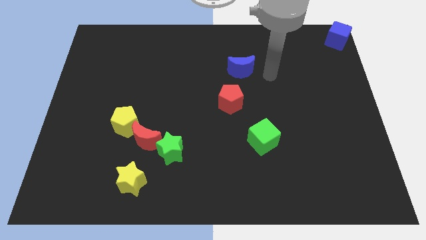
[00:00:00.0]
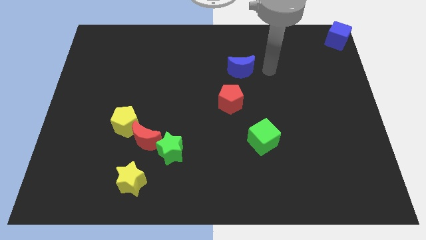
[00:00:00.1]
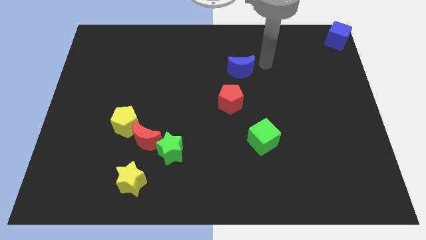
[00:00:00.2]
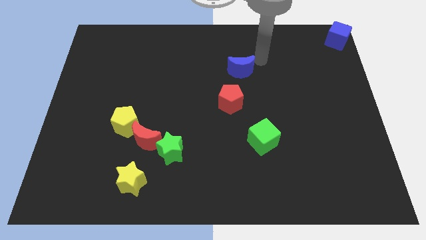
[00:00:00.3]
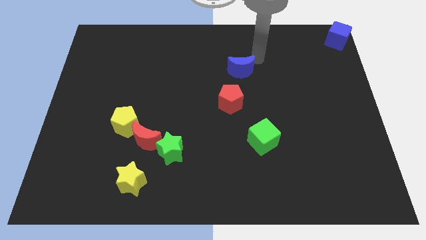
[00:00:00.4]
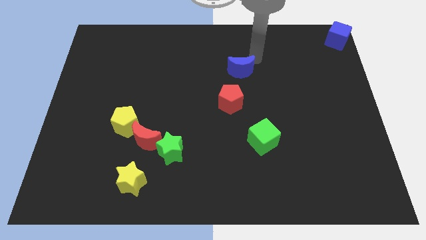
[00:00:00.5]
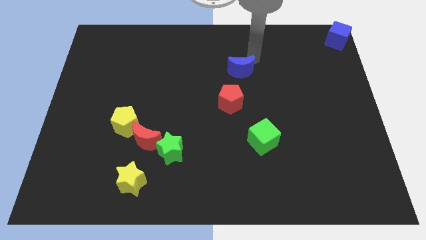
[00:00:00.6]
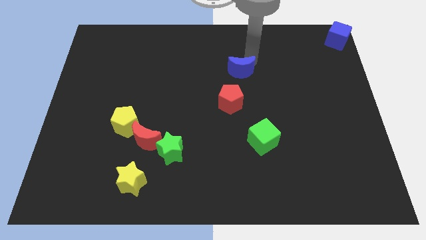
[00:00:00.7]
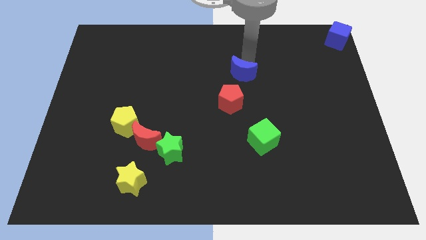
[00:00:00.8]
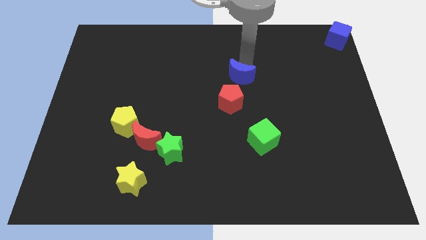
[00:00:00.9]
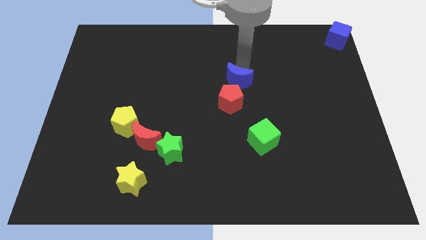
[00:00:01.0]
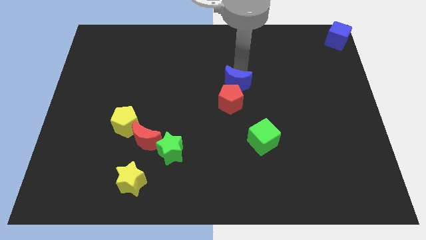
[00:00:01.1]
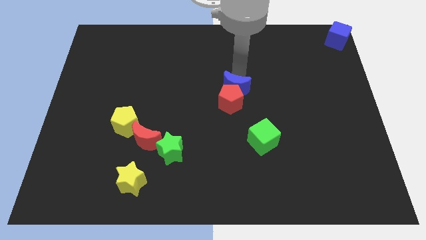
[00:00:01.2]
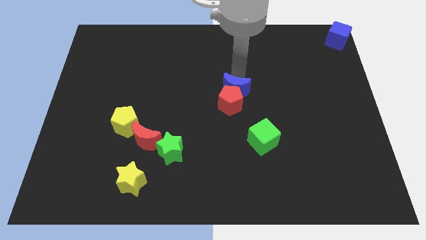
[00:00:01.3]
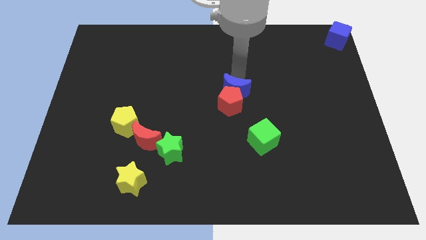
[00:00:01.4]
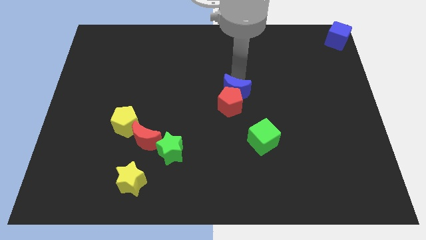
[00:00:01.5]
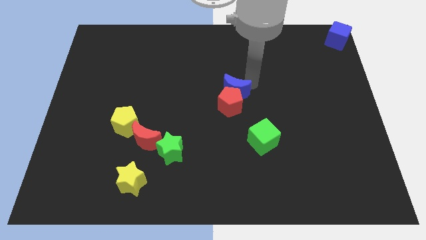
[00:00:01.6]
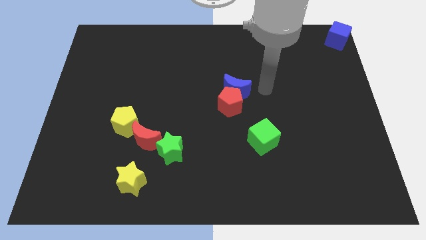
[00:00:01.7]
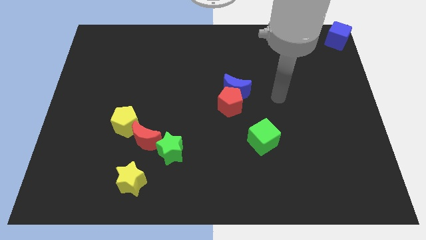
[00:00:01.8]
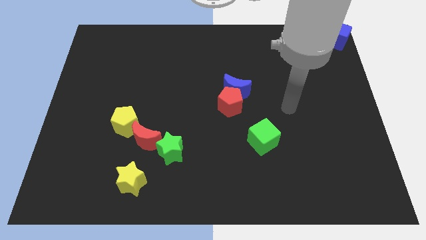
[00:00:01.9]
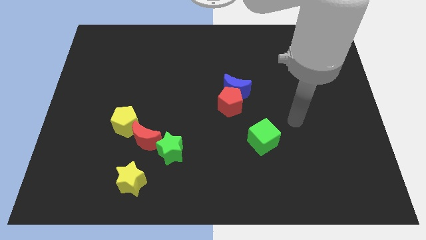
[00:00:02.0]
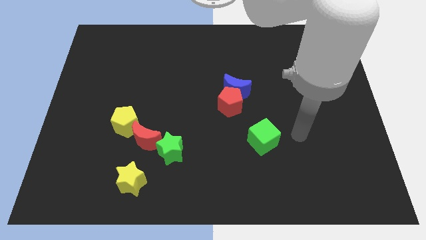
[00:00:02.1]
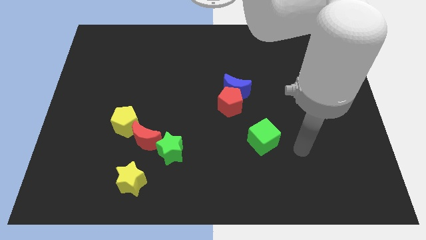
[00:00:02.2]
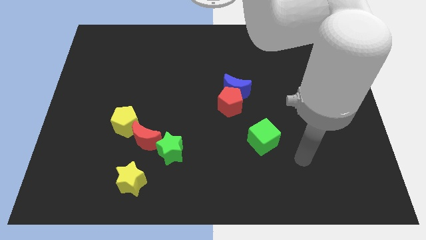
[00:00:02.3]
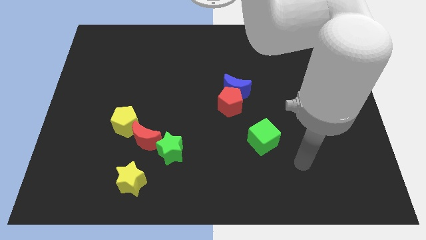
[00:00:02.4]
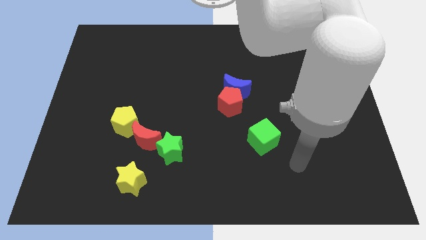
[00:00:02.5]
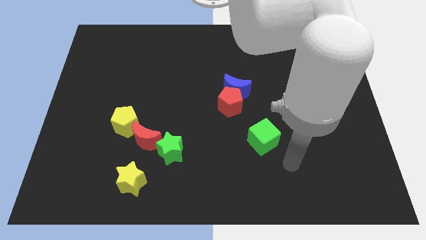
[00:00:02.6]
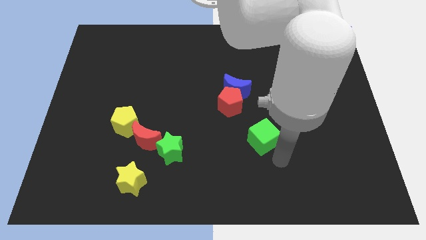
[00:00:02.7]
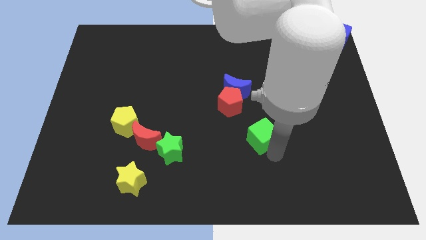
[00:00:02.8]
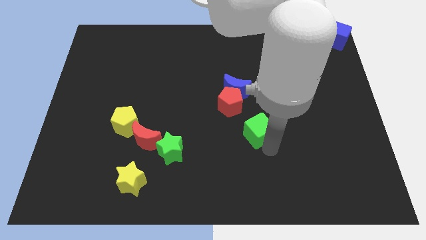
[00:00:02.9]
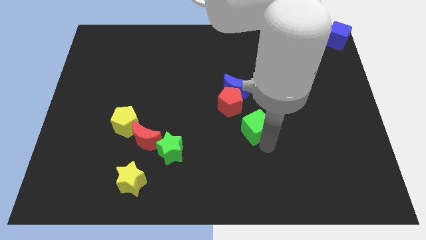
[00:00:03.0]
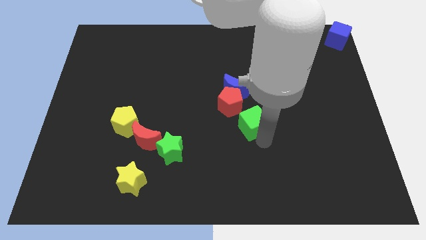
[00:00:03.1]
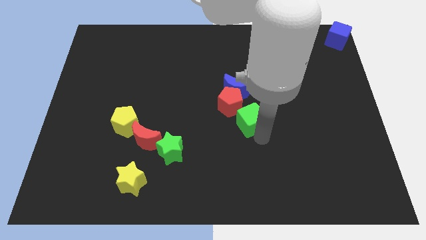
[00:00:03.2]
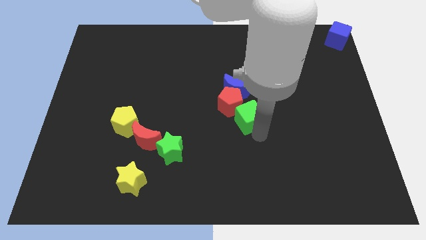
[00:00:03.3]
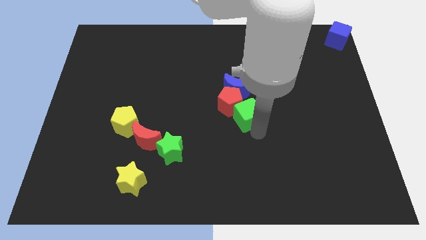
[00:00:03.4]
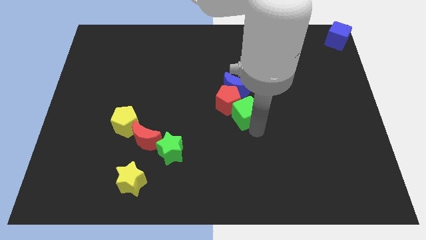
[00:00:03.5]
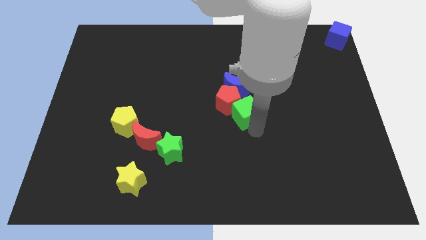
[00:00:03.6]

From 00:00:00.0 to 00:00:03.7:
move green cube into red pentagon

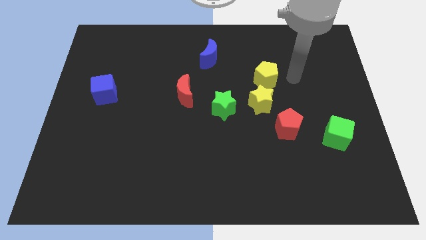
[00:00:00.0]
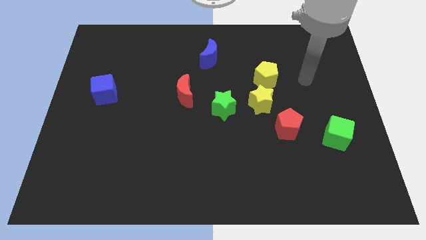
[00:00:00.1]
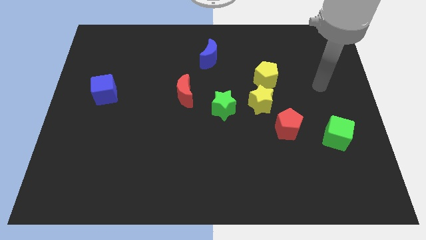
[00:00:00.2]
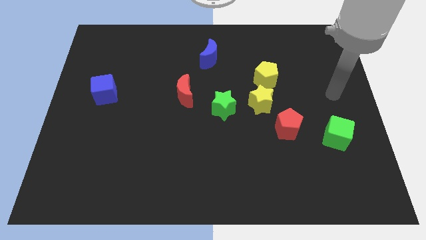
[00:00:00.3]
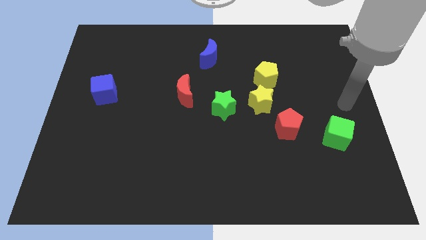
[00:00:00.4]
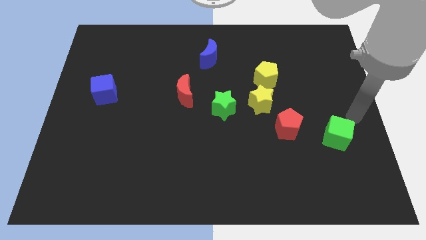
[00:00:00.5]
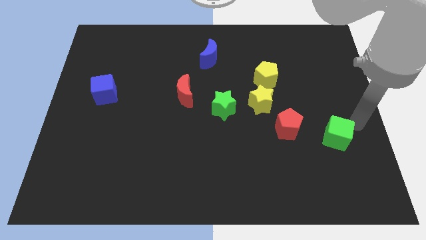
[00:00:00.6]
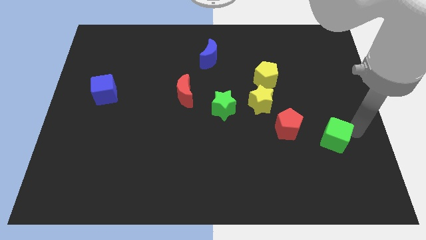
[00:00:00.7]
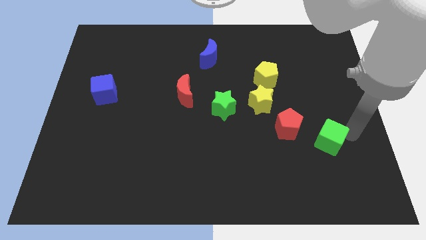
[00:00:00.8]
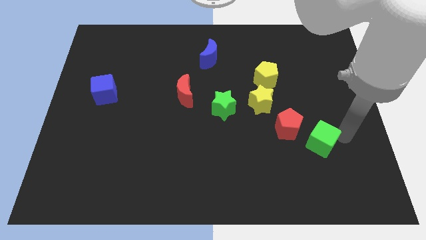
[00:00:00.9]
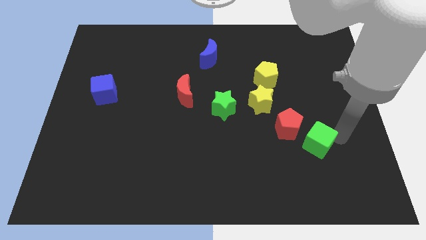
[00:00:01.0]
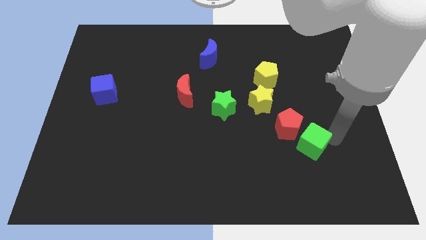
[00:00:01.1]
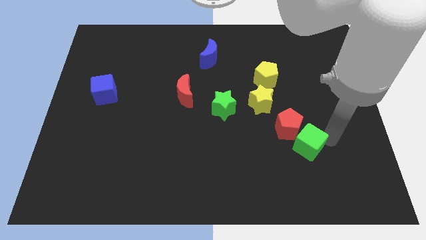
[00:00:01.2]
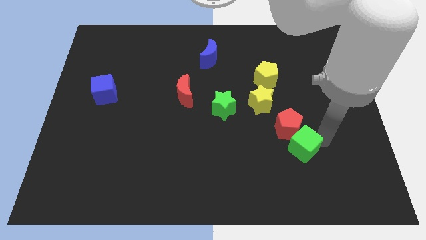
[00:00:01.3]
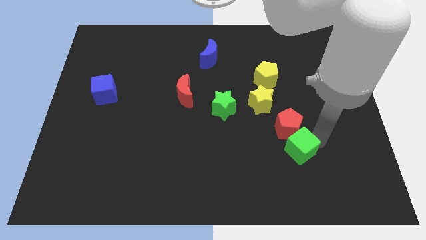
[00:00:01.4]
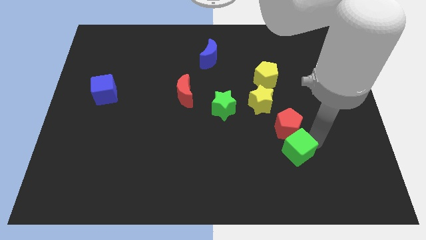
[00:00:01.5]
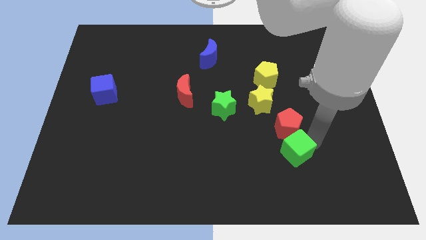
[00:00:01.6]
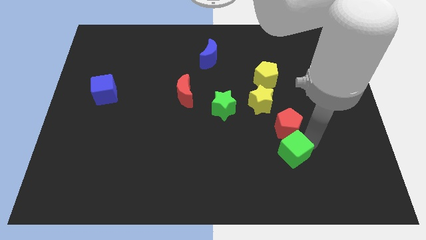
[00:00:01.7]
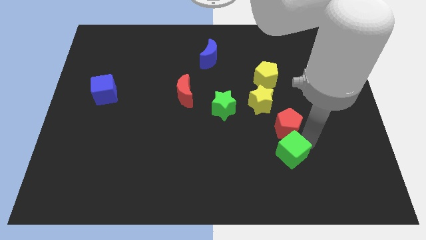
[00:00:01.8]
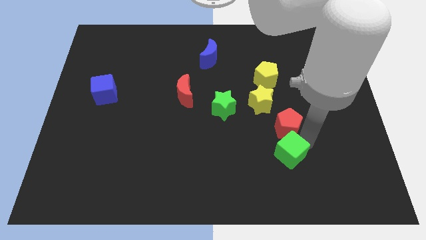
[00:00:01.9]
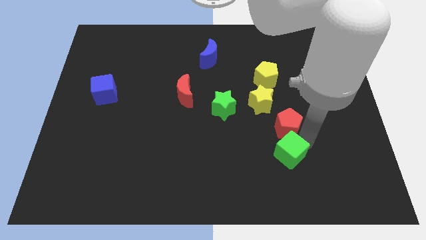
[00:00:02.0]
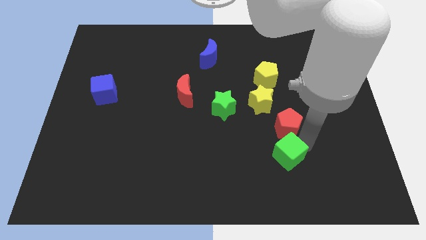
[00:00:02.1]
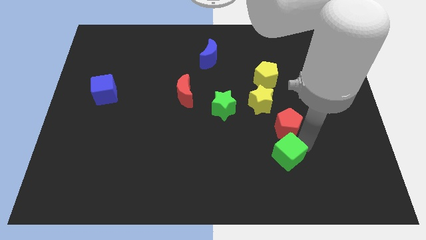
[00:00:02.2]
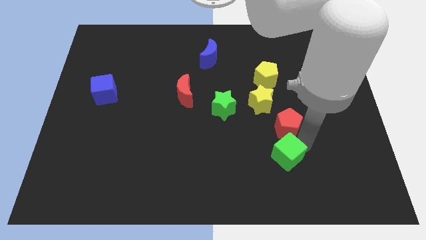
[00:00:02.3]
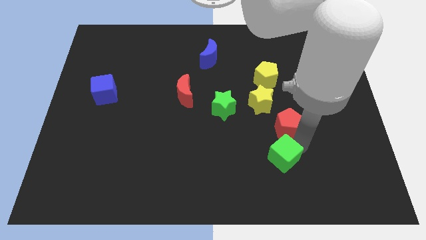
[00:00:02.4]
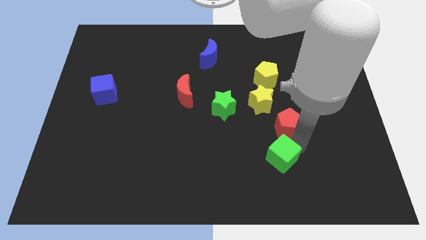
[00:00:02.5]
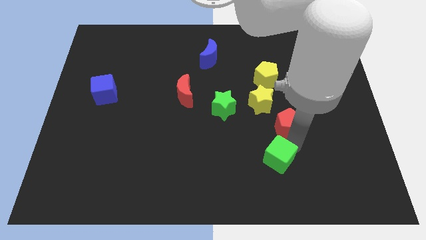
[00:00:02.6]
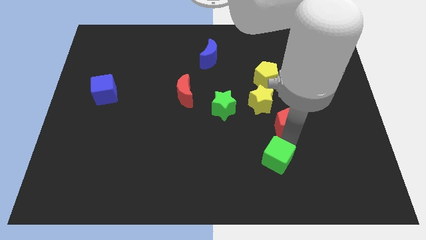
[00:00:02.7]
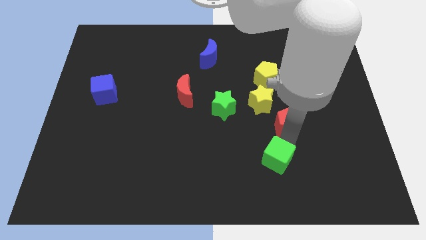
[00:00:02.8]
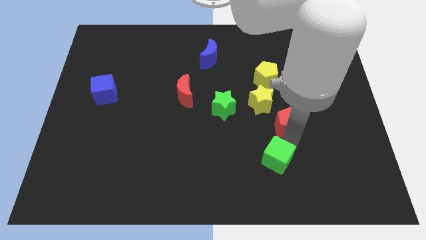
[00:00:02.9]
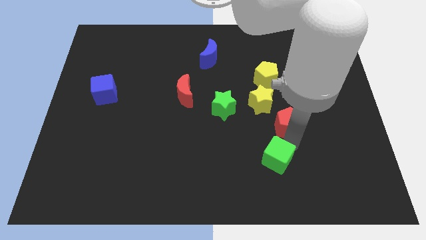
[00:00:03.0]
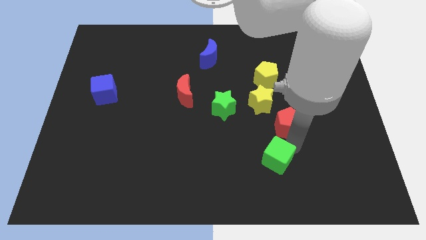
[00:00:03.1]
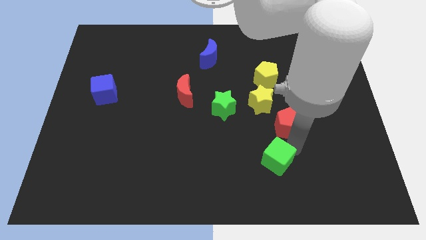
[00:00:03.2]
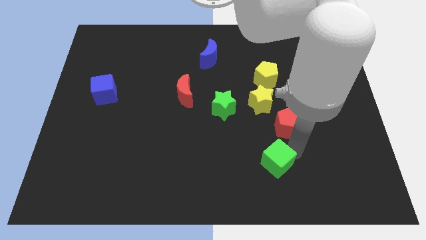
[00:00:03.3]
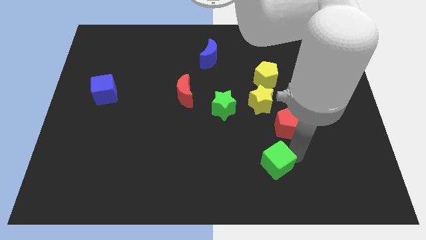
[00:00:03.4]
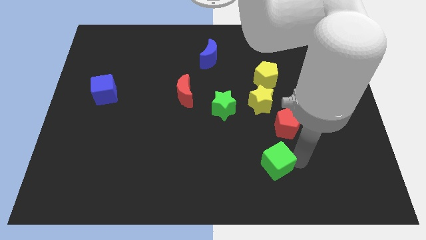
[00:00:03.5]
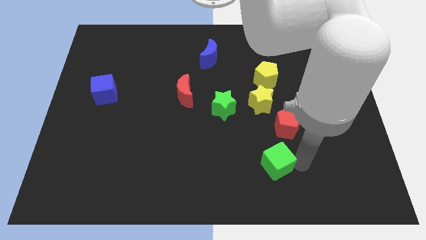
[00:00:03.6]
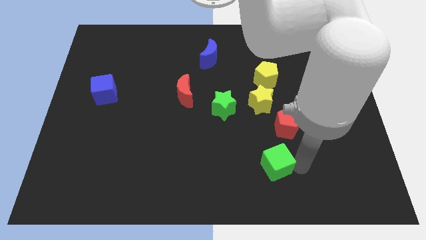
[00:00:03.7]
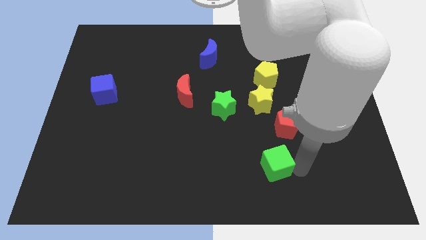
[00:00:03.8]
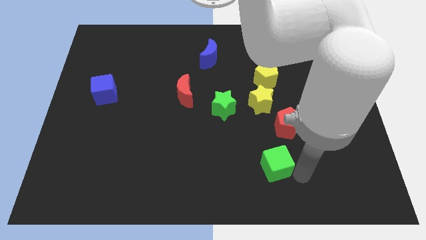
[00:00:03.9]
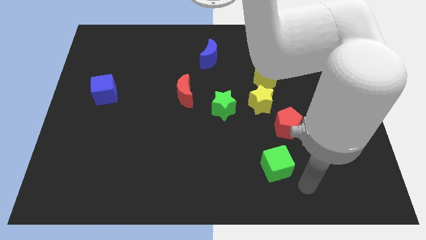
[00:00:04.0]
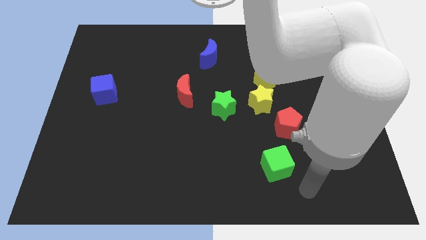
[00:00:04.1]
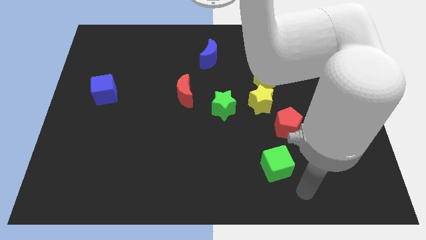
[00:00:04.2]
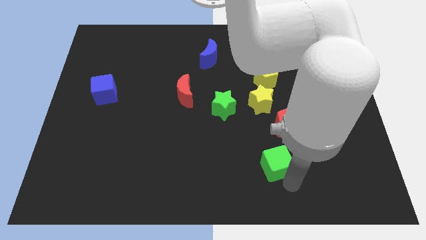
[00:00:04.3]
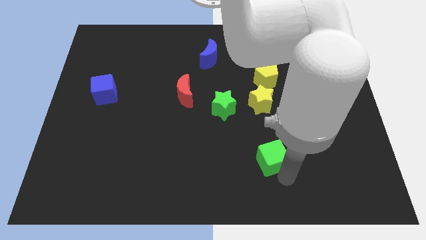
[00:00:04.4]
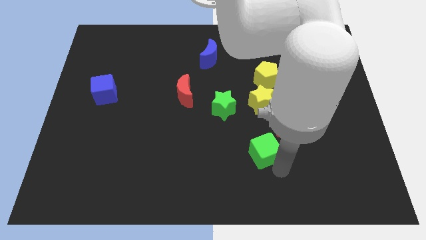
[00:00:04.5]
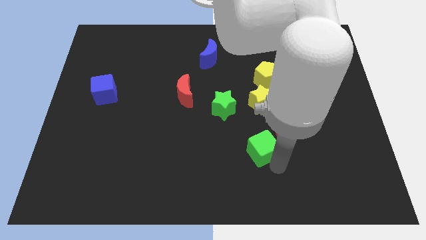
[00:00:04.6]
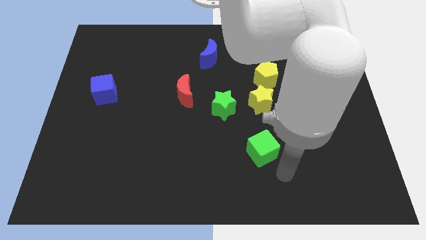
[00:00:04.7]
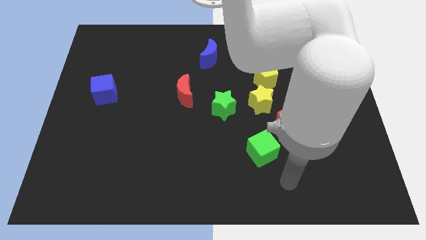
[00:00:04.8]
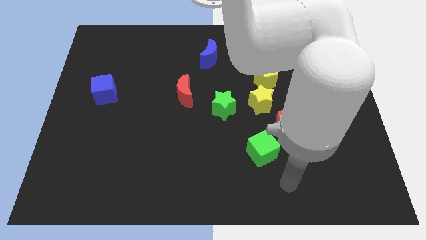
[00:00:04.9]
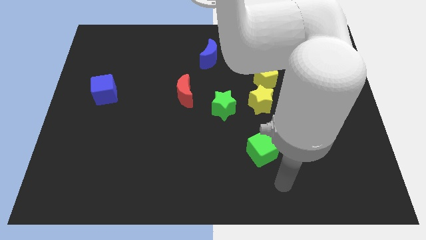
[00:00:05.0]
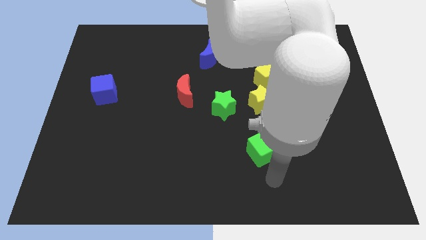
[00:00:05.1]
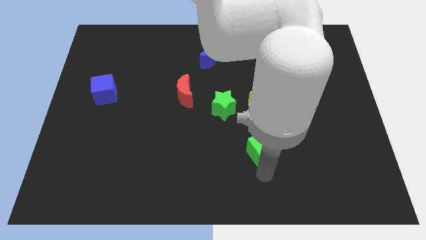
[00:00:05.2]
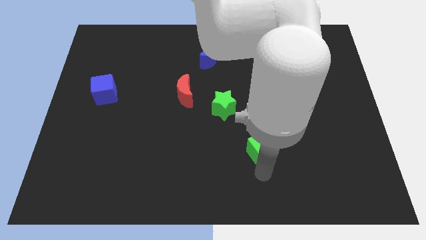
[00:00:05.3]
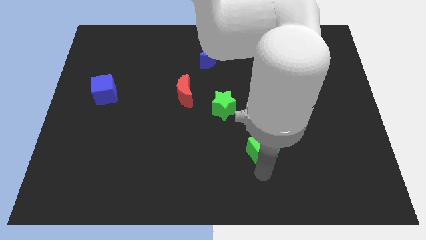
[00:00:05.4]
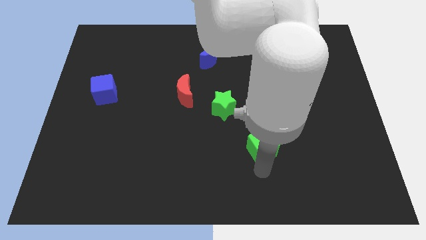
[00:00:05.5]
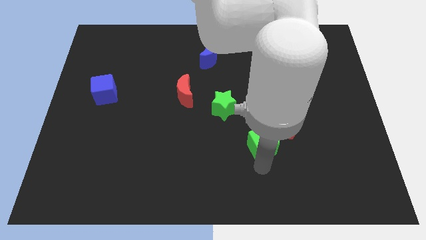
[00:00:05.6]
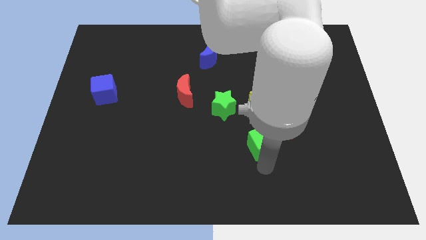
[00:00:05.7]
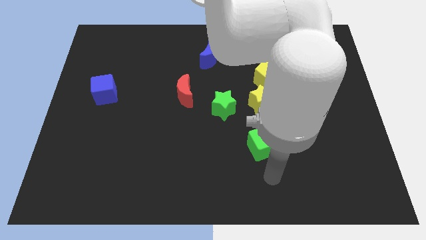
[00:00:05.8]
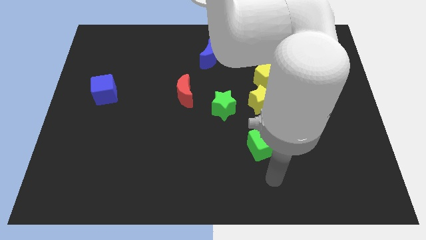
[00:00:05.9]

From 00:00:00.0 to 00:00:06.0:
place the green cube below the yellow star
